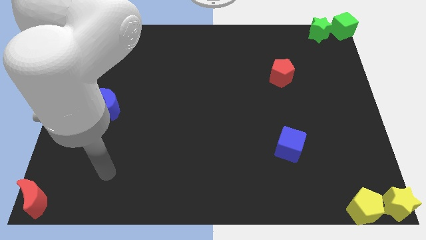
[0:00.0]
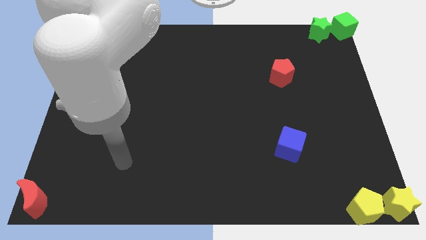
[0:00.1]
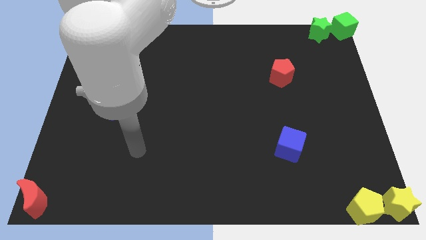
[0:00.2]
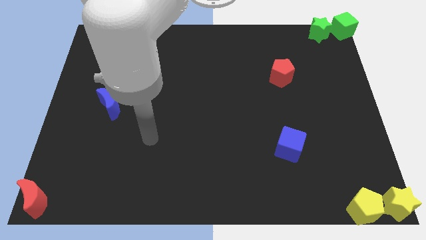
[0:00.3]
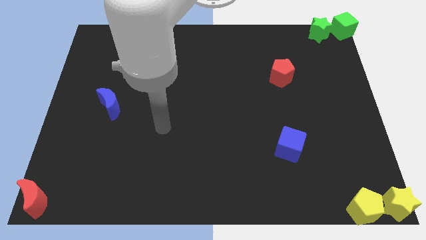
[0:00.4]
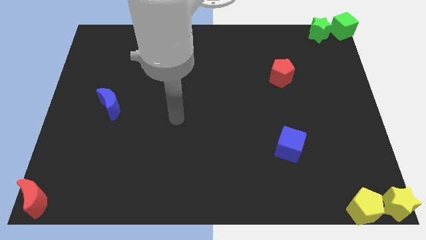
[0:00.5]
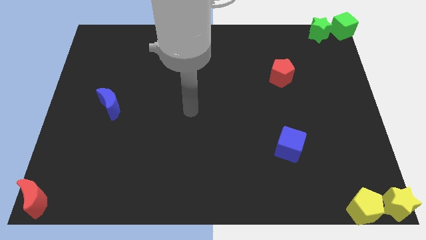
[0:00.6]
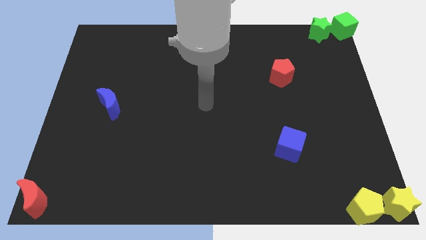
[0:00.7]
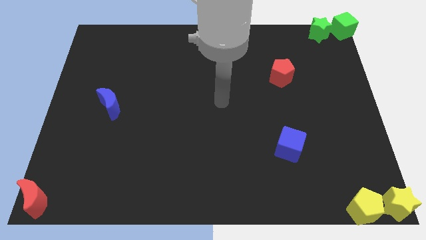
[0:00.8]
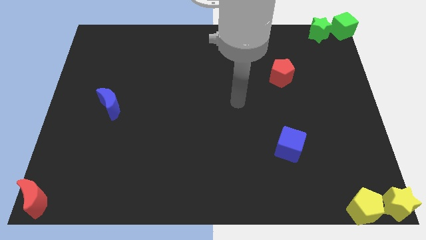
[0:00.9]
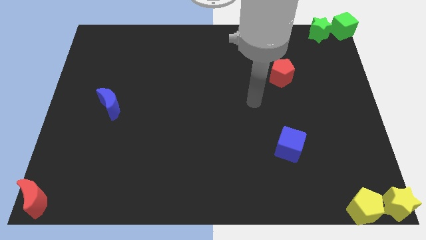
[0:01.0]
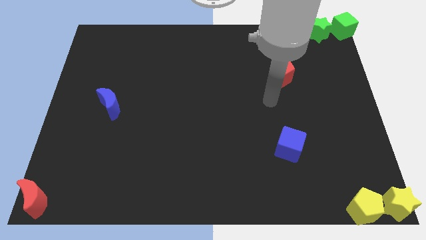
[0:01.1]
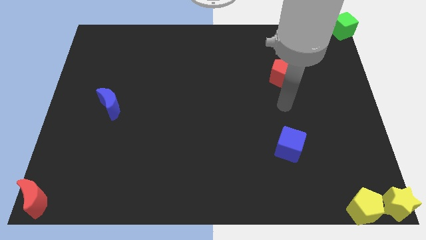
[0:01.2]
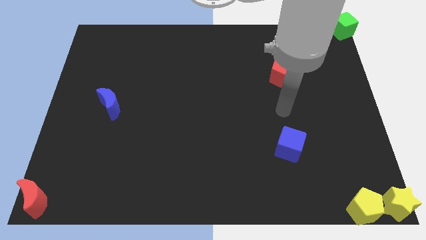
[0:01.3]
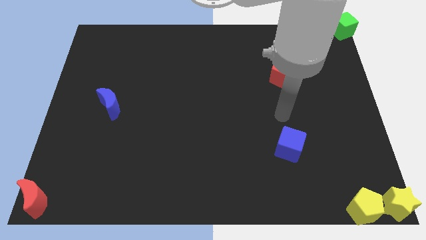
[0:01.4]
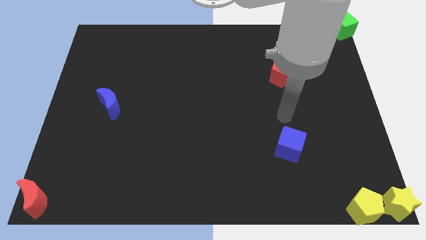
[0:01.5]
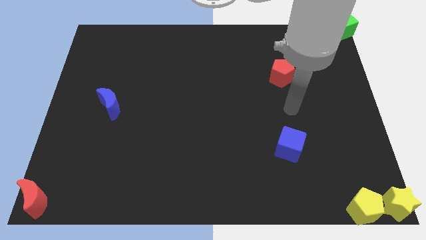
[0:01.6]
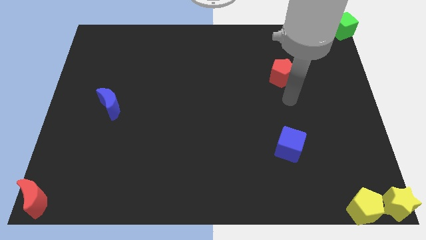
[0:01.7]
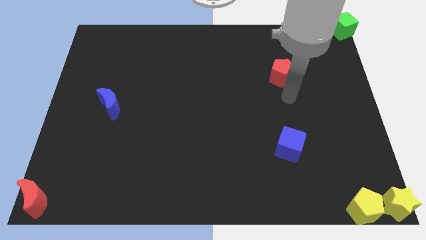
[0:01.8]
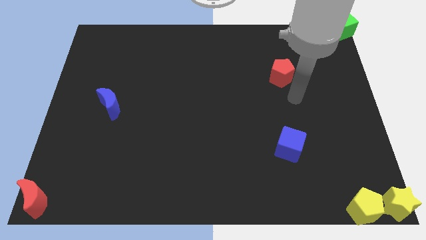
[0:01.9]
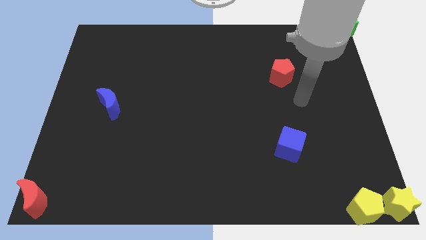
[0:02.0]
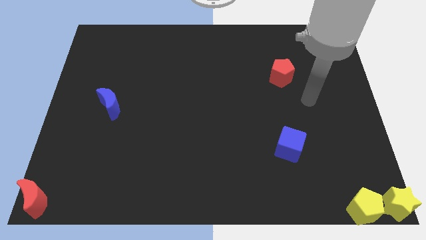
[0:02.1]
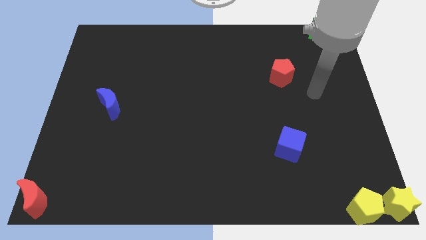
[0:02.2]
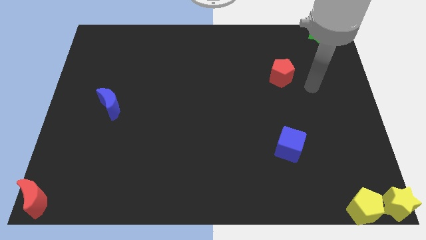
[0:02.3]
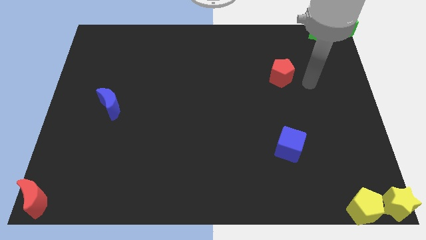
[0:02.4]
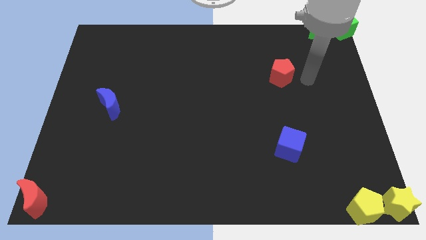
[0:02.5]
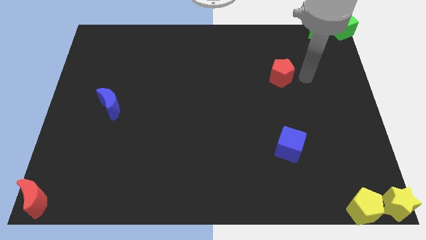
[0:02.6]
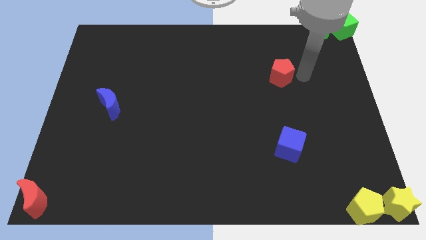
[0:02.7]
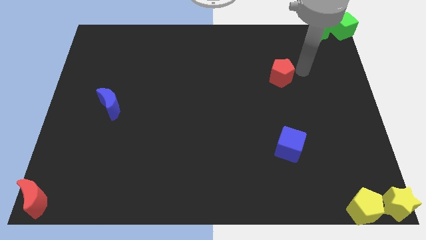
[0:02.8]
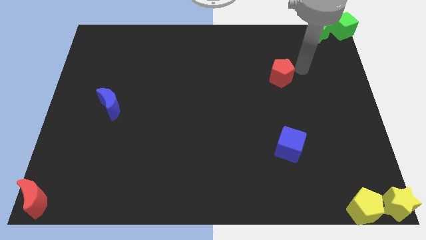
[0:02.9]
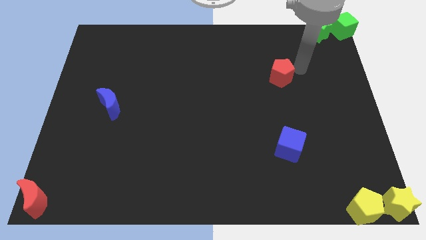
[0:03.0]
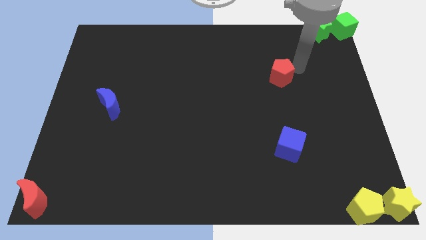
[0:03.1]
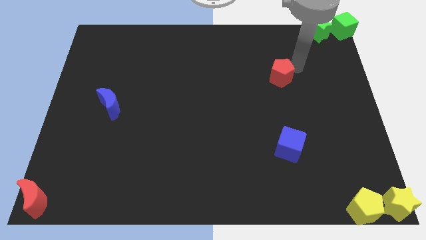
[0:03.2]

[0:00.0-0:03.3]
move your arm to the top of the red pentagon

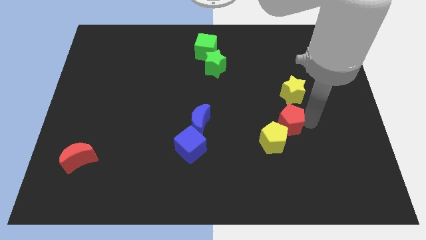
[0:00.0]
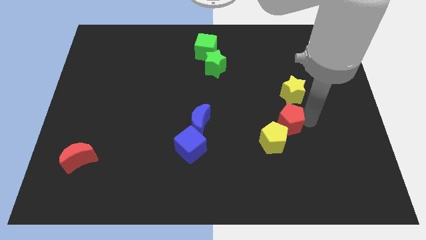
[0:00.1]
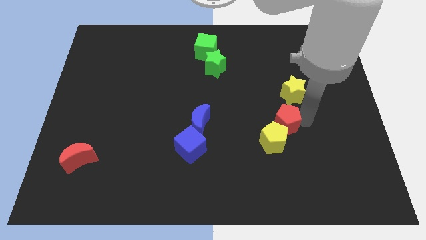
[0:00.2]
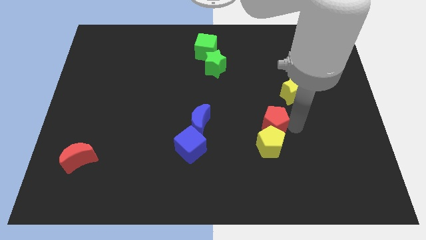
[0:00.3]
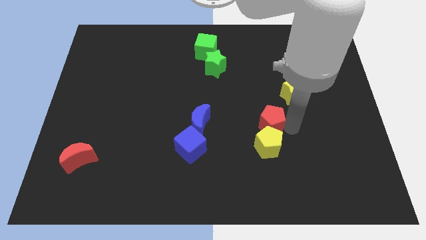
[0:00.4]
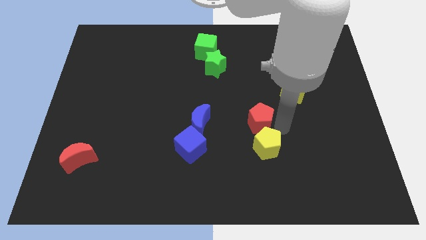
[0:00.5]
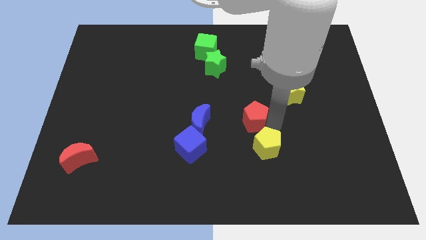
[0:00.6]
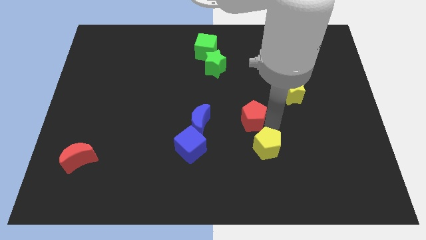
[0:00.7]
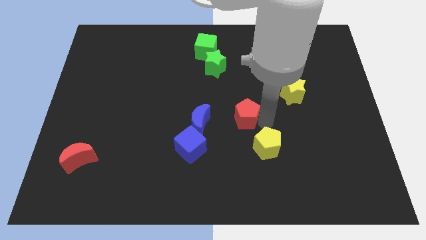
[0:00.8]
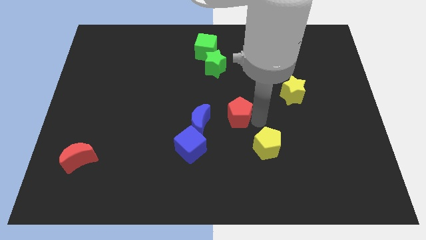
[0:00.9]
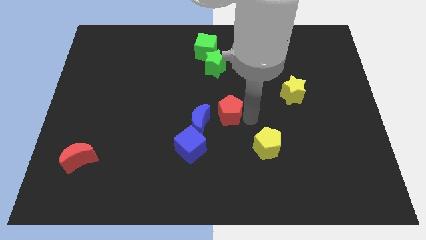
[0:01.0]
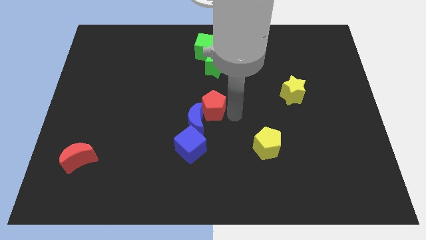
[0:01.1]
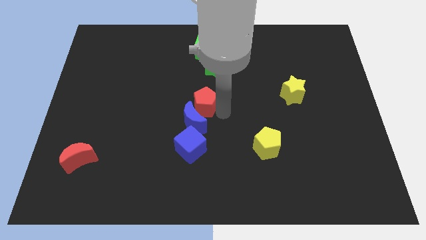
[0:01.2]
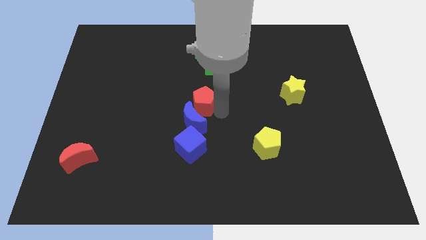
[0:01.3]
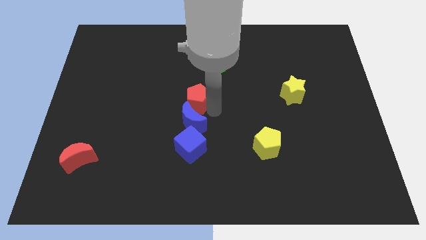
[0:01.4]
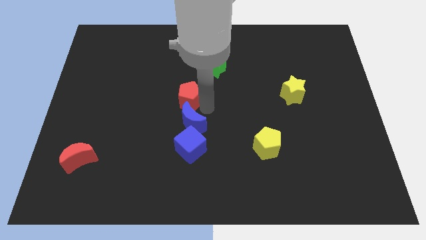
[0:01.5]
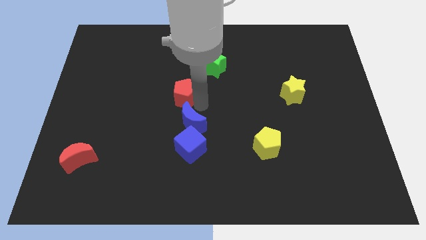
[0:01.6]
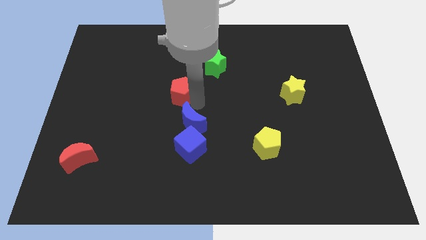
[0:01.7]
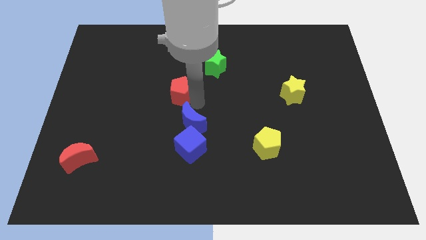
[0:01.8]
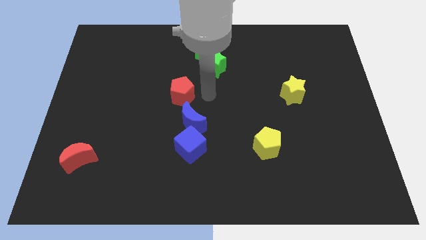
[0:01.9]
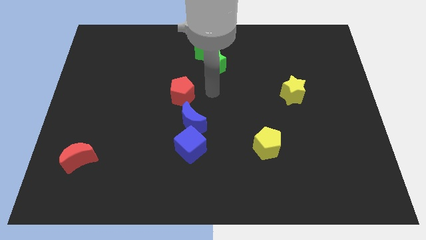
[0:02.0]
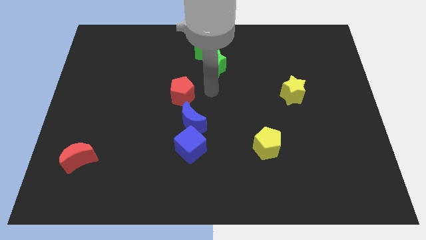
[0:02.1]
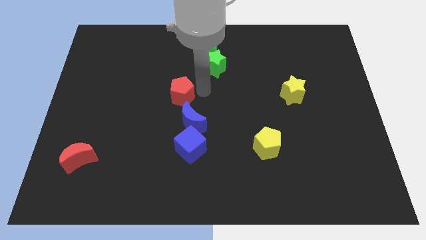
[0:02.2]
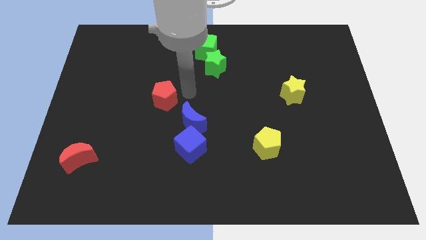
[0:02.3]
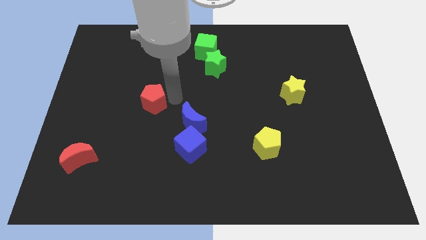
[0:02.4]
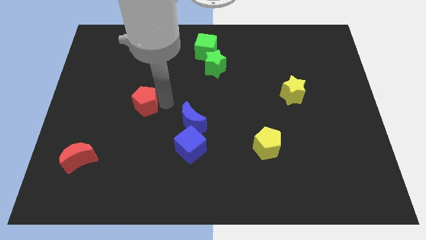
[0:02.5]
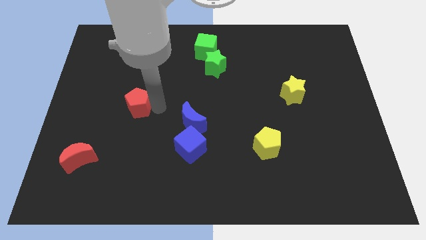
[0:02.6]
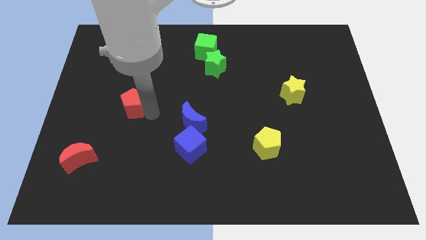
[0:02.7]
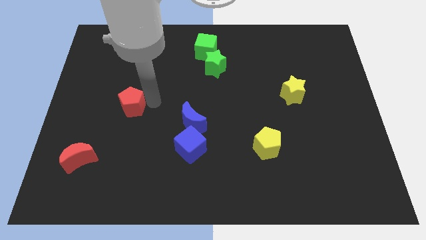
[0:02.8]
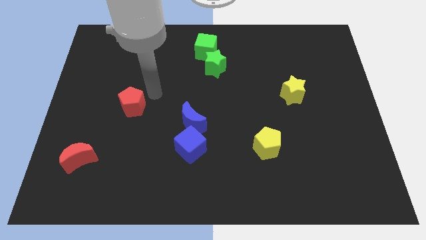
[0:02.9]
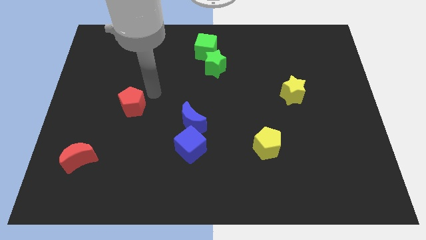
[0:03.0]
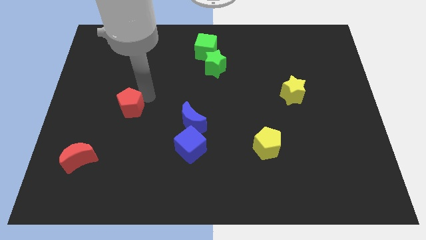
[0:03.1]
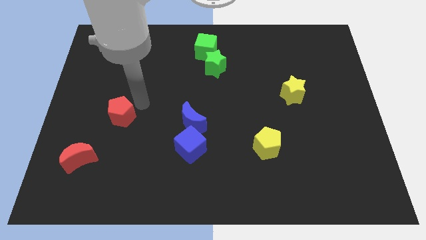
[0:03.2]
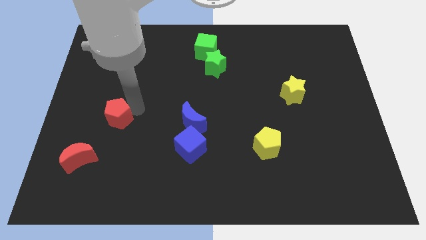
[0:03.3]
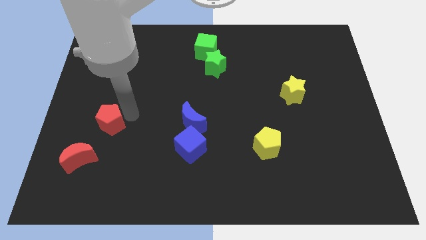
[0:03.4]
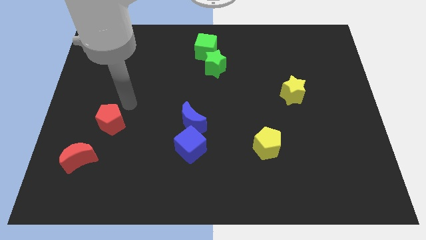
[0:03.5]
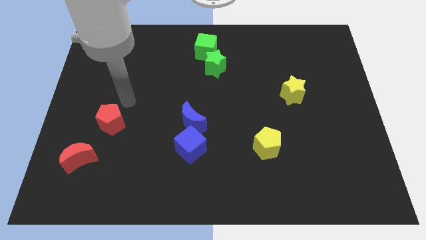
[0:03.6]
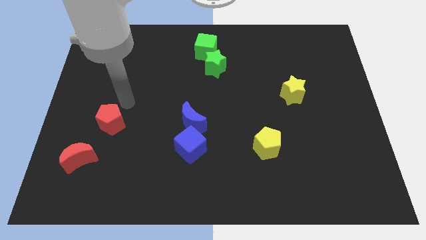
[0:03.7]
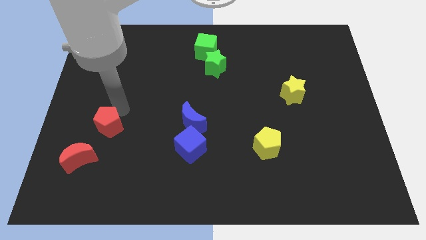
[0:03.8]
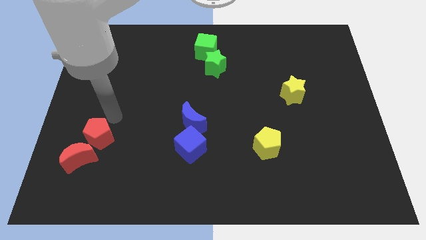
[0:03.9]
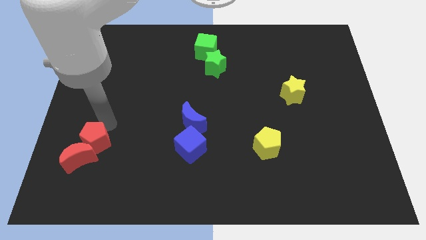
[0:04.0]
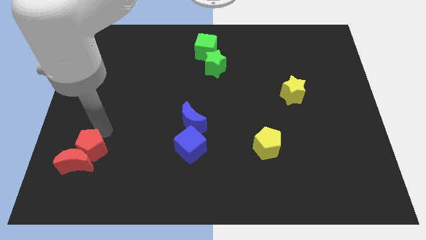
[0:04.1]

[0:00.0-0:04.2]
separate the red pentagon from the yellow pentagon

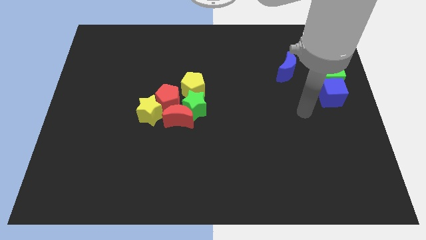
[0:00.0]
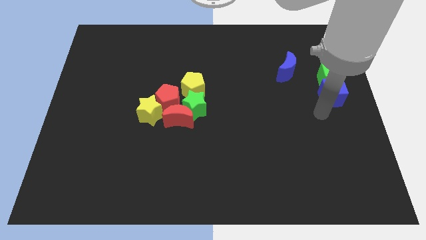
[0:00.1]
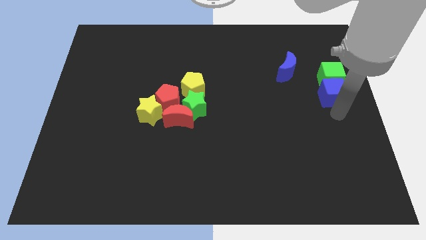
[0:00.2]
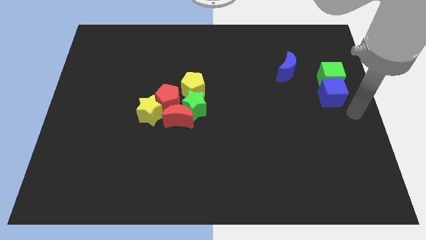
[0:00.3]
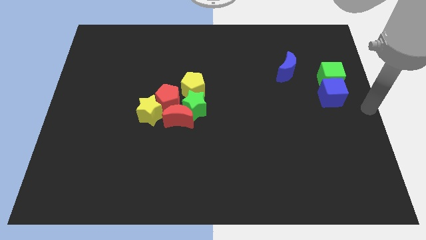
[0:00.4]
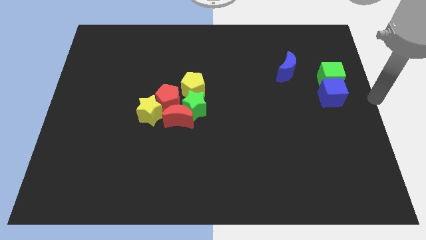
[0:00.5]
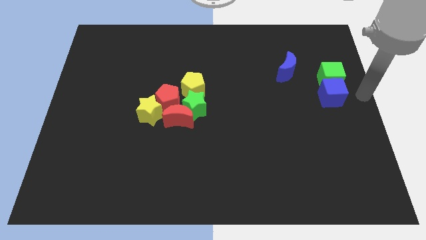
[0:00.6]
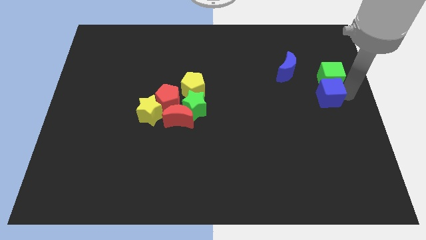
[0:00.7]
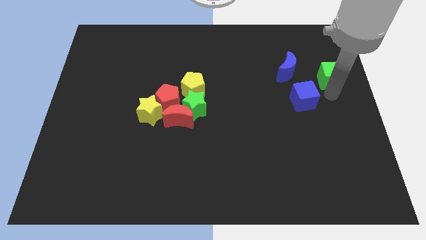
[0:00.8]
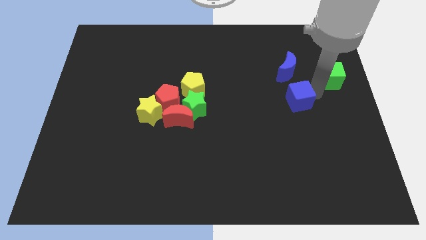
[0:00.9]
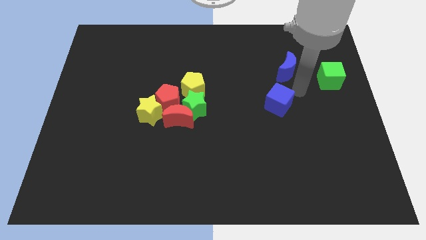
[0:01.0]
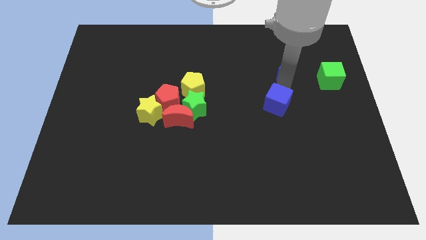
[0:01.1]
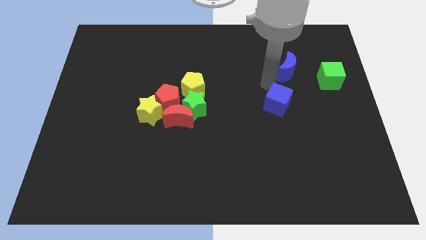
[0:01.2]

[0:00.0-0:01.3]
place the blue cube below the blue moon

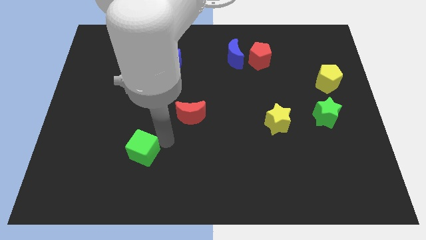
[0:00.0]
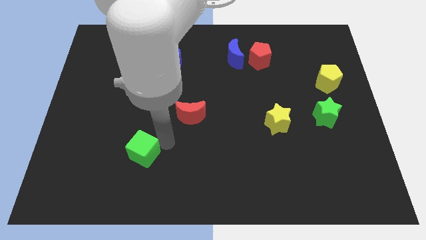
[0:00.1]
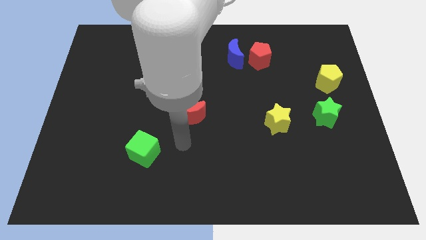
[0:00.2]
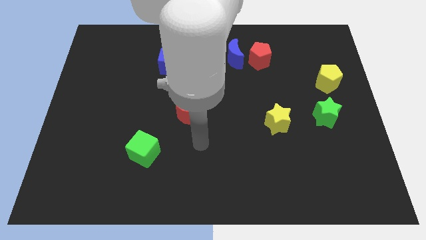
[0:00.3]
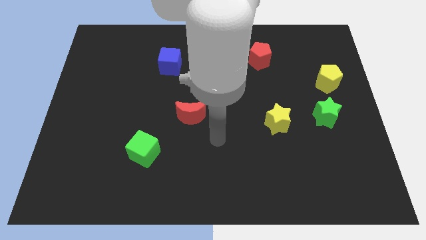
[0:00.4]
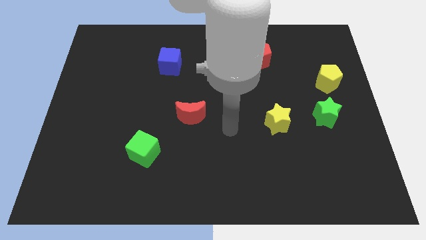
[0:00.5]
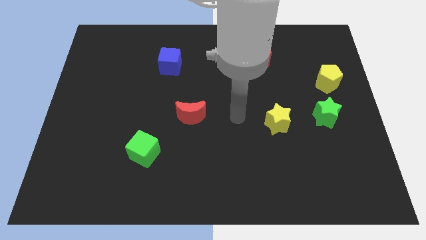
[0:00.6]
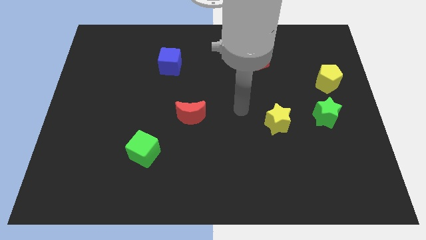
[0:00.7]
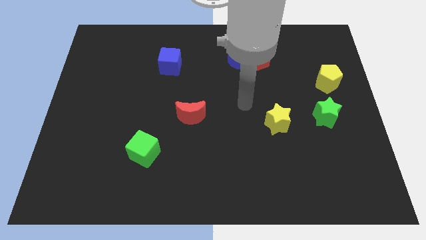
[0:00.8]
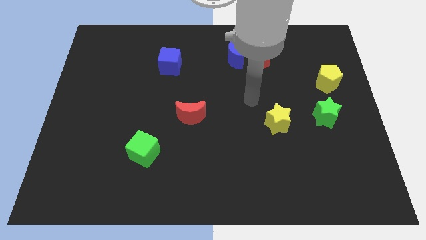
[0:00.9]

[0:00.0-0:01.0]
move your arm away from green cube
